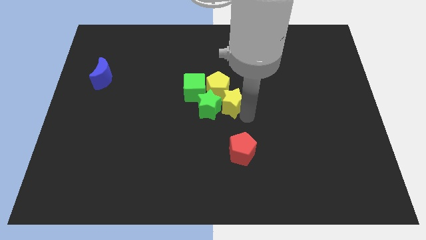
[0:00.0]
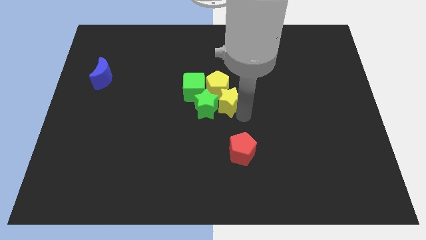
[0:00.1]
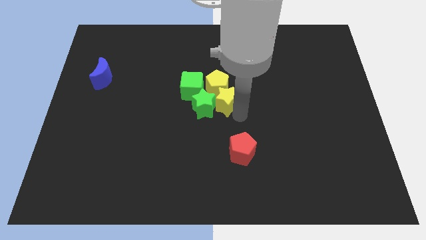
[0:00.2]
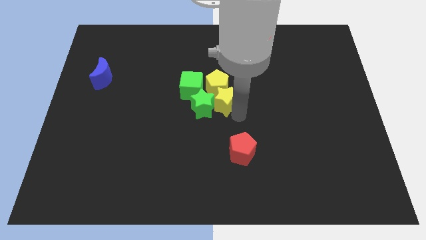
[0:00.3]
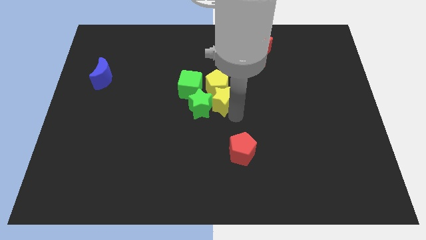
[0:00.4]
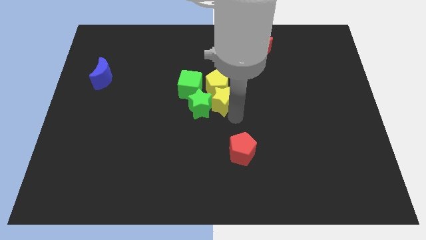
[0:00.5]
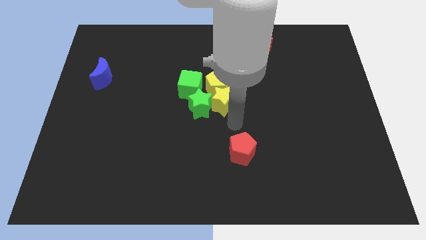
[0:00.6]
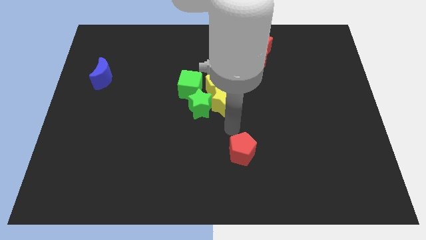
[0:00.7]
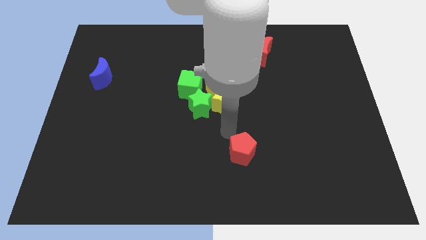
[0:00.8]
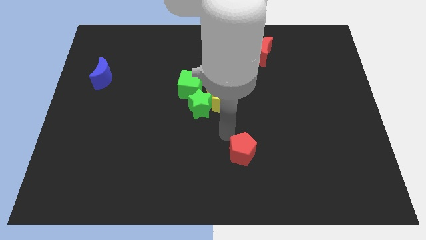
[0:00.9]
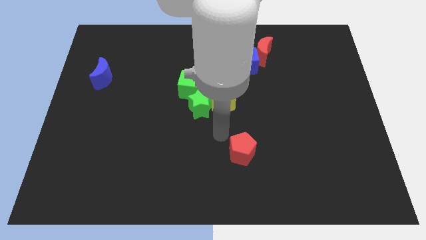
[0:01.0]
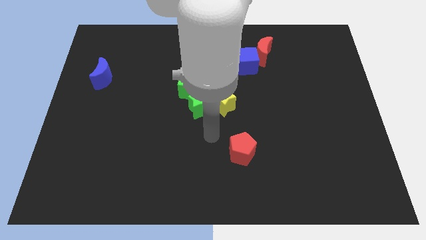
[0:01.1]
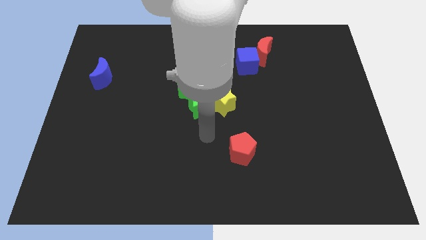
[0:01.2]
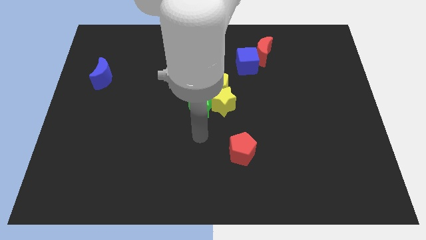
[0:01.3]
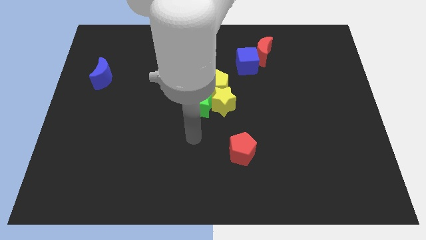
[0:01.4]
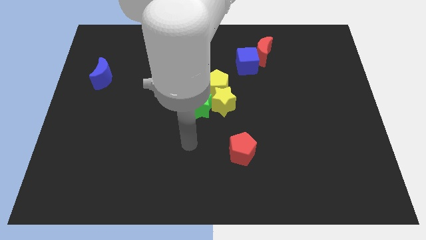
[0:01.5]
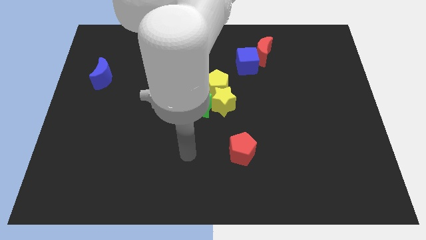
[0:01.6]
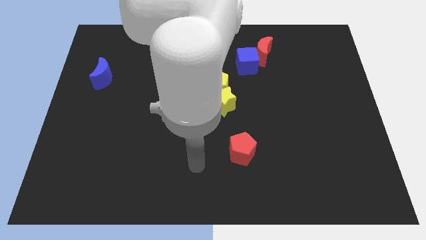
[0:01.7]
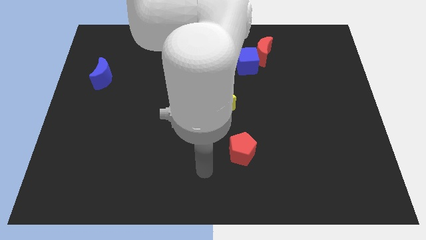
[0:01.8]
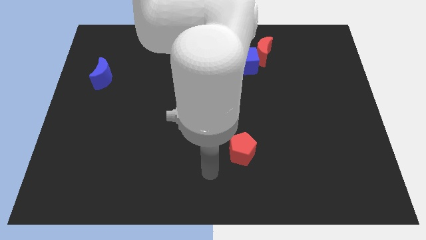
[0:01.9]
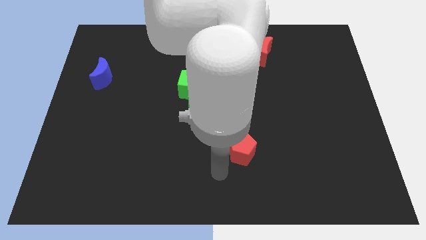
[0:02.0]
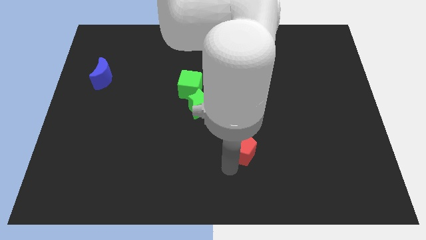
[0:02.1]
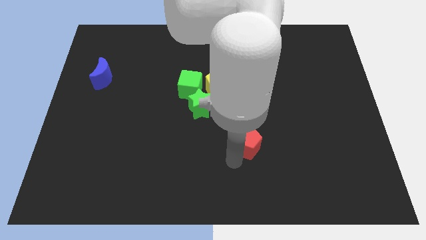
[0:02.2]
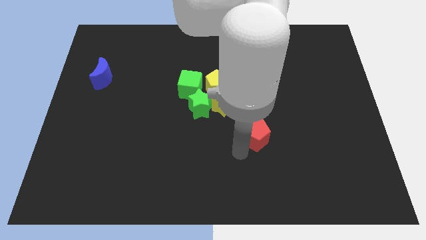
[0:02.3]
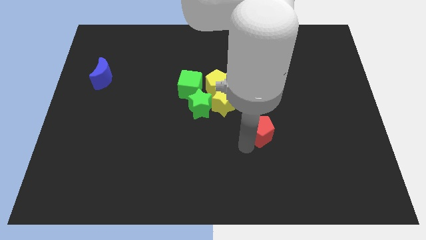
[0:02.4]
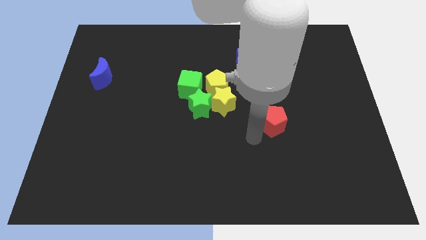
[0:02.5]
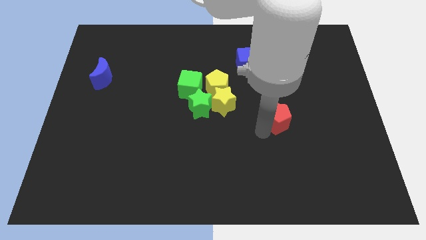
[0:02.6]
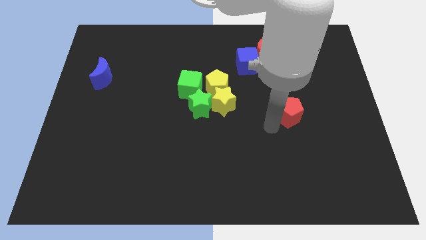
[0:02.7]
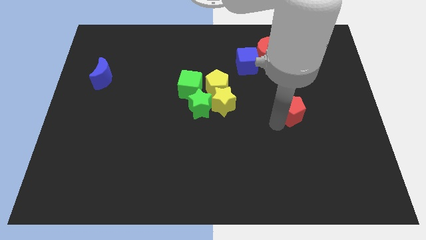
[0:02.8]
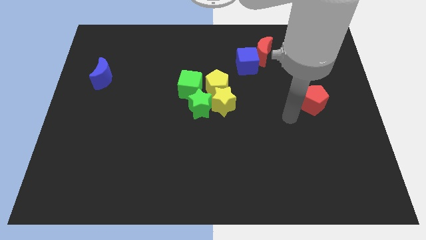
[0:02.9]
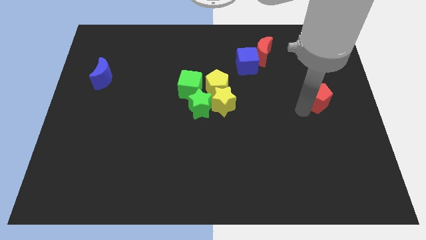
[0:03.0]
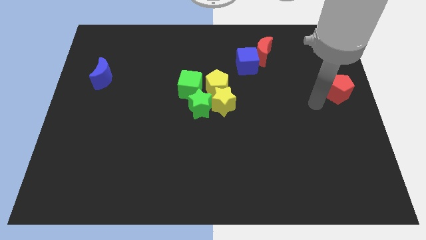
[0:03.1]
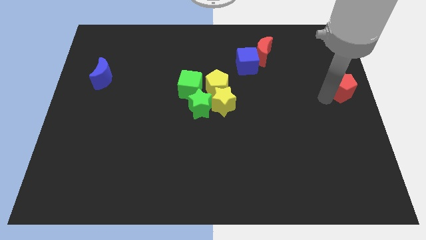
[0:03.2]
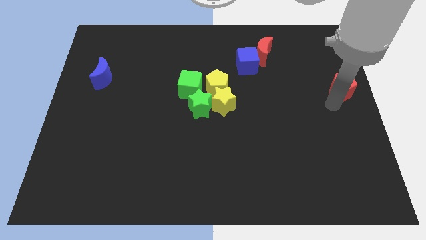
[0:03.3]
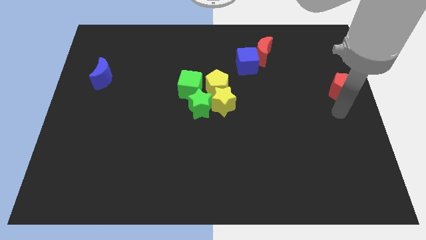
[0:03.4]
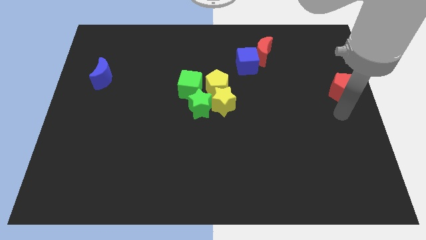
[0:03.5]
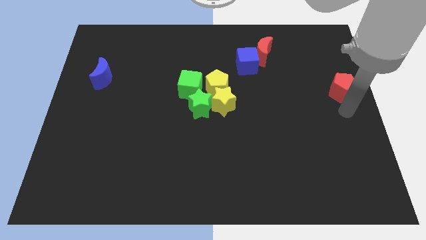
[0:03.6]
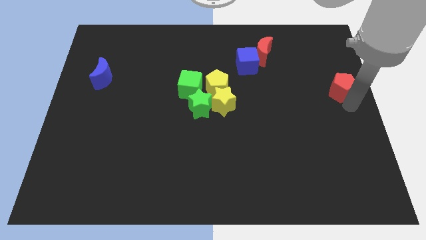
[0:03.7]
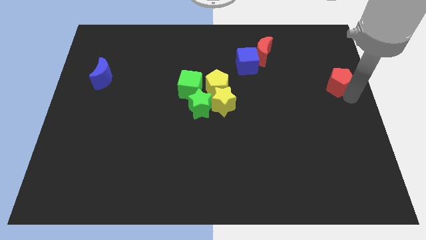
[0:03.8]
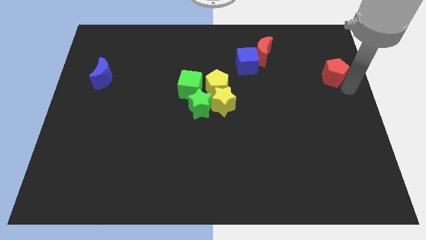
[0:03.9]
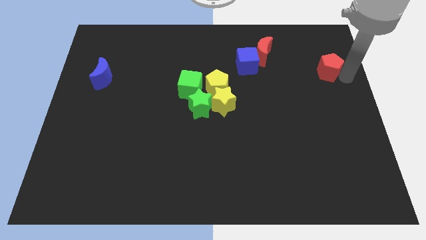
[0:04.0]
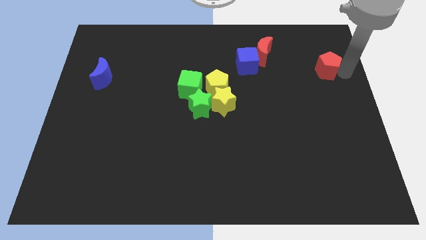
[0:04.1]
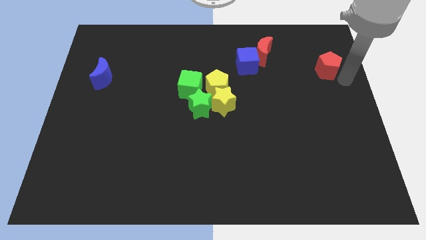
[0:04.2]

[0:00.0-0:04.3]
slide the red pentagon to the right of the red crescent

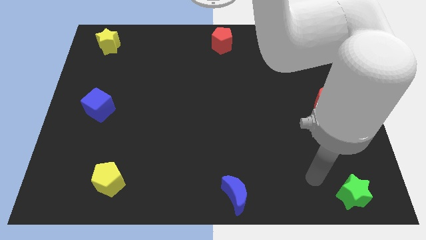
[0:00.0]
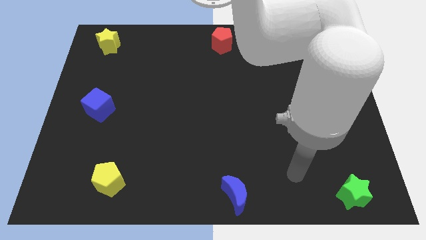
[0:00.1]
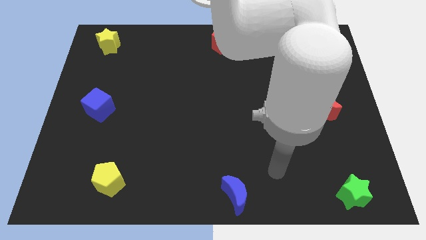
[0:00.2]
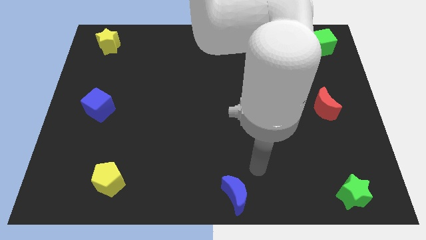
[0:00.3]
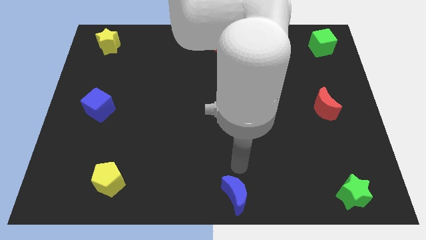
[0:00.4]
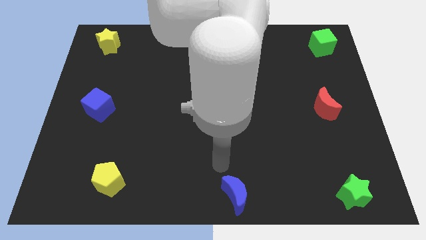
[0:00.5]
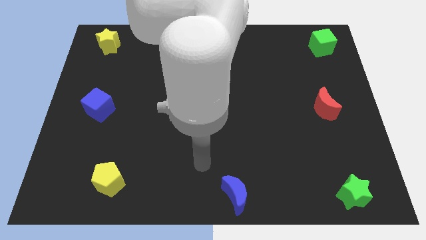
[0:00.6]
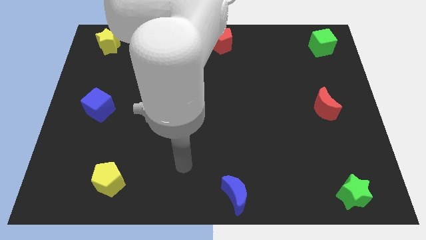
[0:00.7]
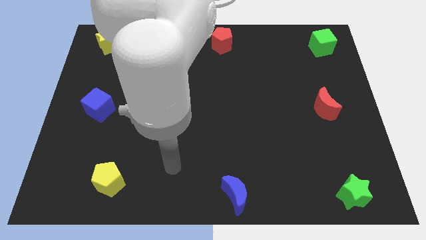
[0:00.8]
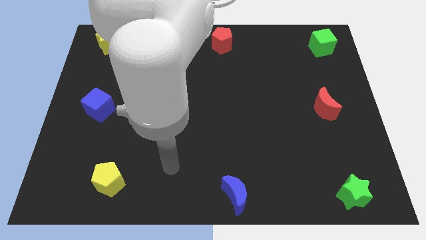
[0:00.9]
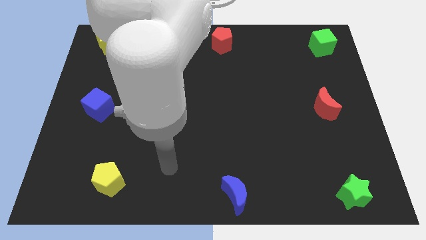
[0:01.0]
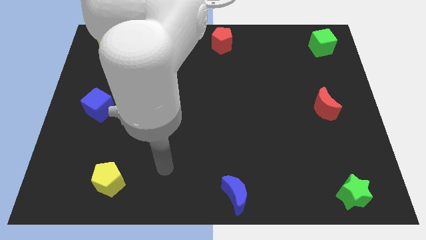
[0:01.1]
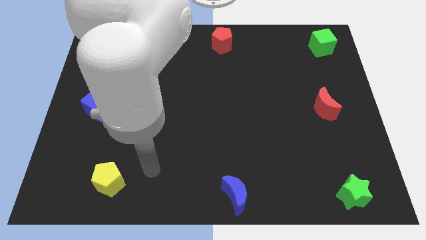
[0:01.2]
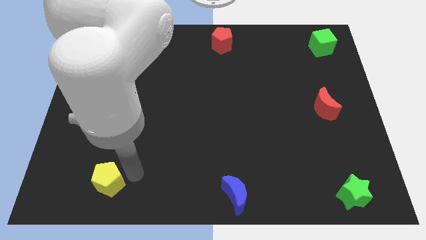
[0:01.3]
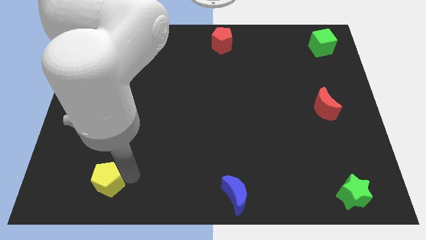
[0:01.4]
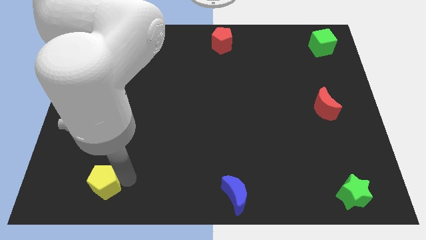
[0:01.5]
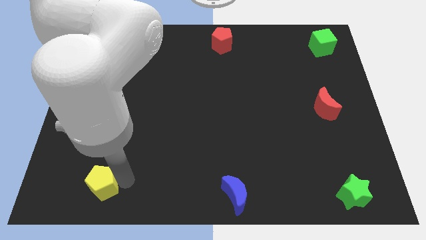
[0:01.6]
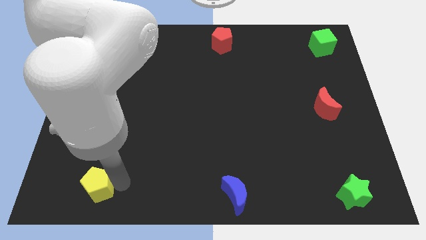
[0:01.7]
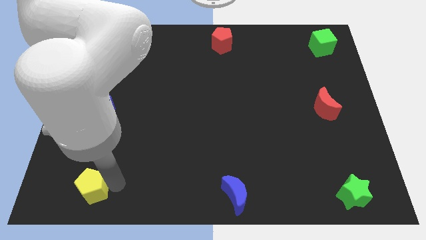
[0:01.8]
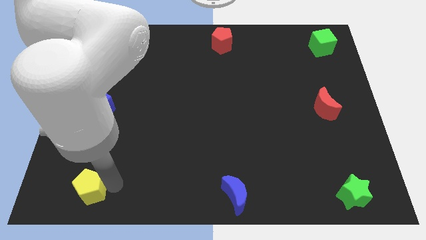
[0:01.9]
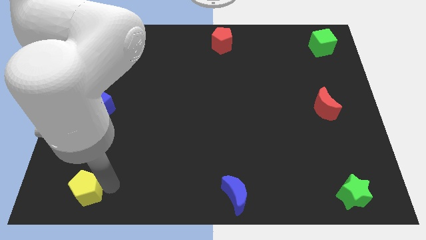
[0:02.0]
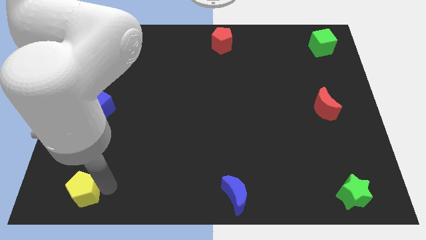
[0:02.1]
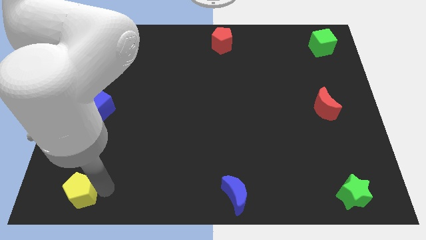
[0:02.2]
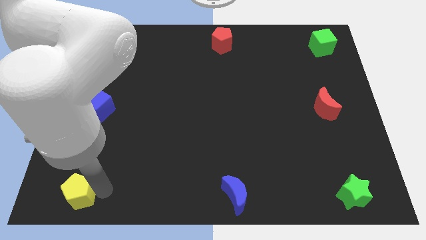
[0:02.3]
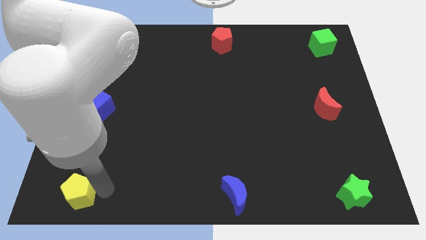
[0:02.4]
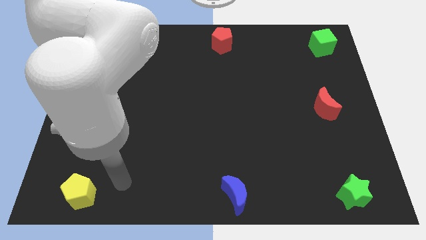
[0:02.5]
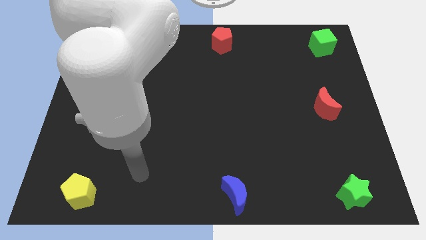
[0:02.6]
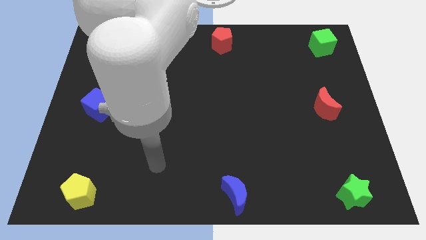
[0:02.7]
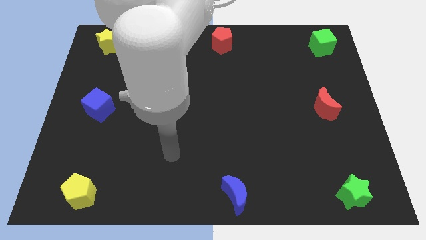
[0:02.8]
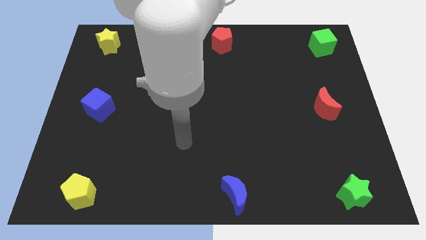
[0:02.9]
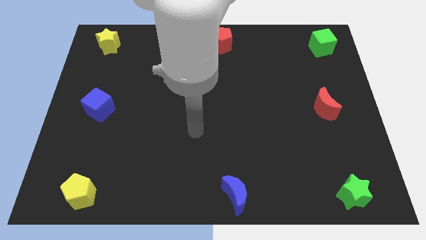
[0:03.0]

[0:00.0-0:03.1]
move the yellow pentagon towards the left side of the board

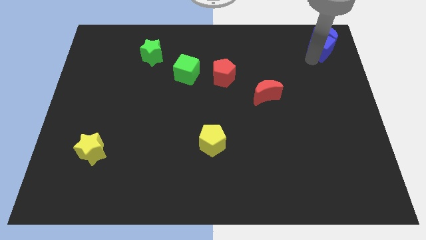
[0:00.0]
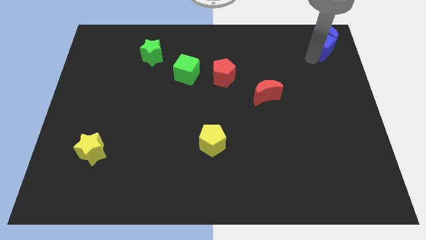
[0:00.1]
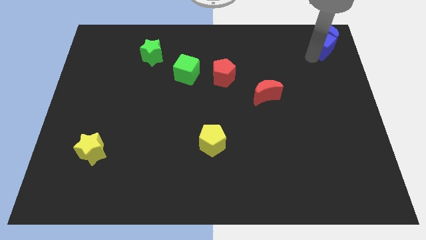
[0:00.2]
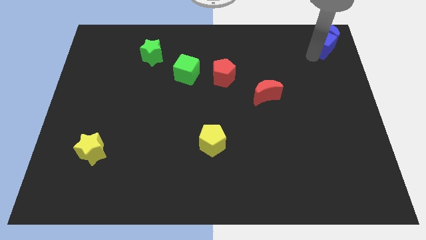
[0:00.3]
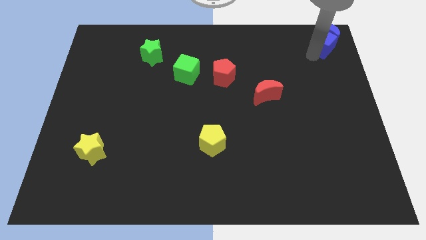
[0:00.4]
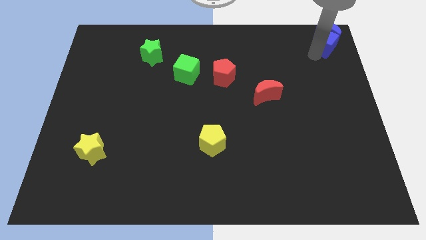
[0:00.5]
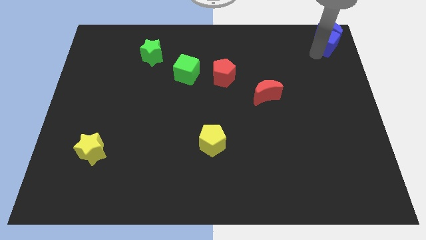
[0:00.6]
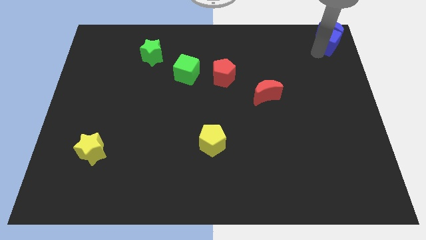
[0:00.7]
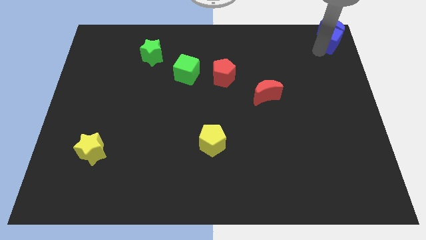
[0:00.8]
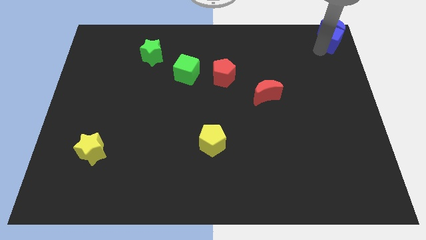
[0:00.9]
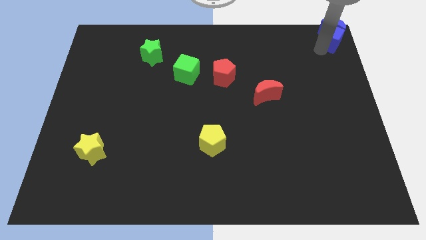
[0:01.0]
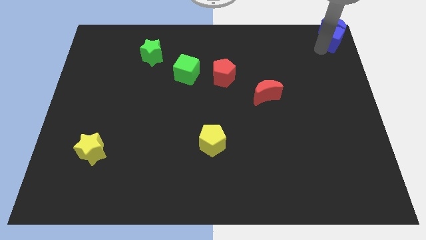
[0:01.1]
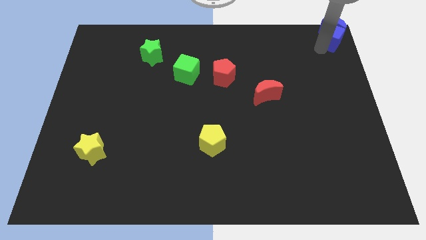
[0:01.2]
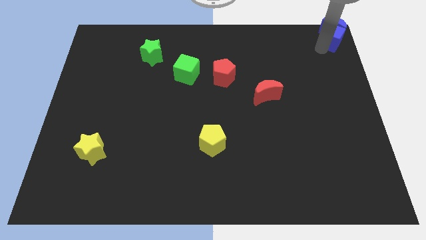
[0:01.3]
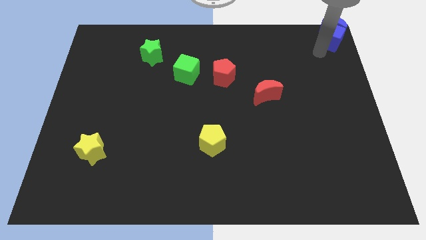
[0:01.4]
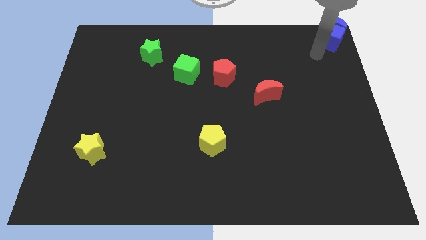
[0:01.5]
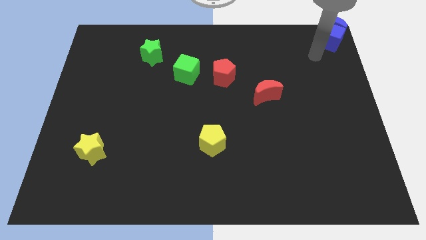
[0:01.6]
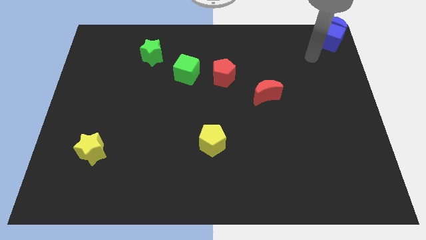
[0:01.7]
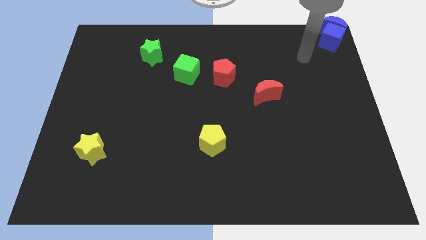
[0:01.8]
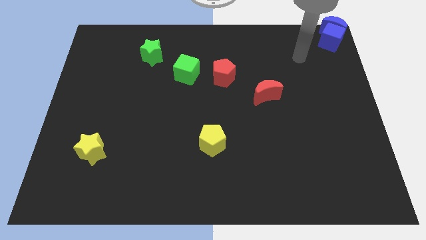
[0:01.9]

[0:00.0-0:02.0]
push the blue cube along with blue crescent to the top right of the board
